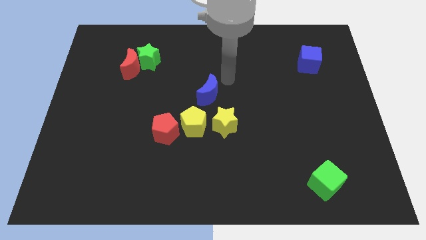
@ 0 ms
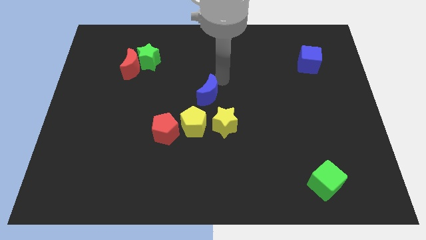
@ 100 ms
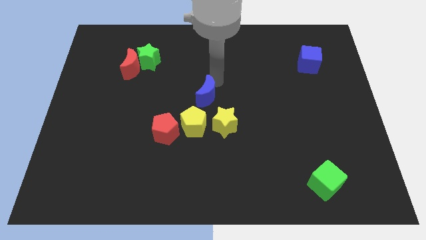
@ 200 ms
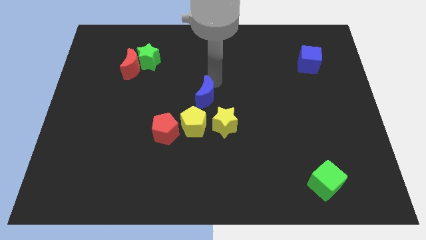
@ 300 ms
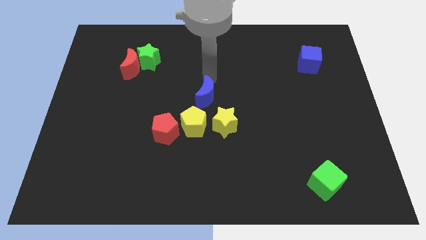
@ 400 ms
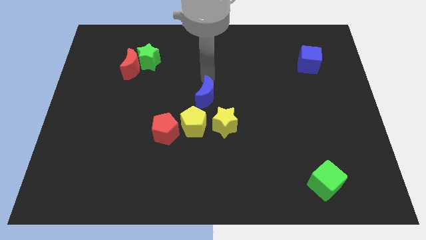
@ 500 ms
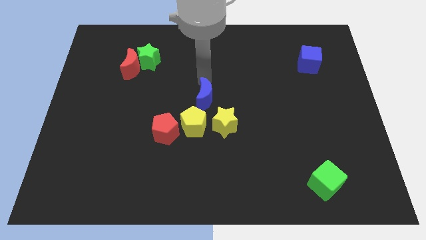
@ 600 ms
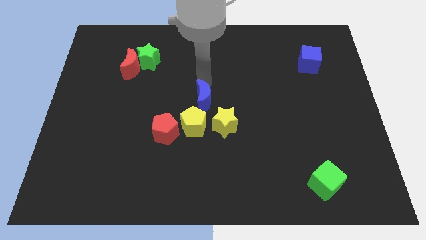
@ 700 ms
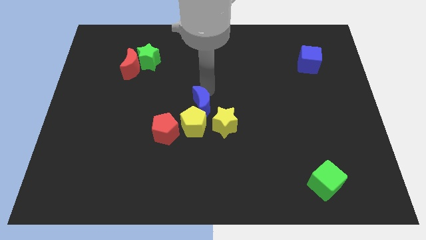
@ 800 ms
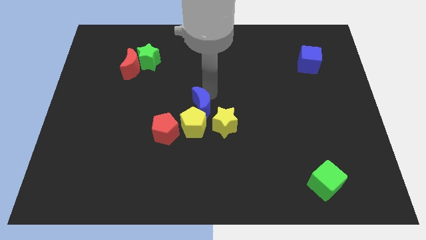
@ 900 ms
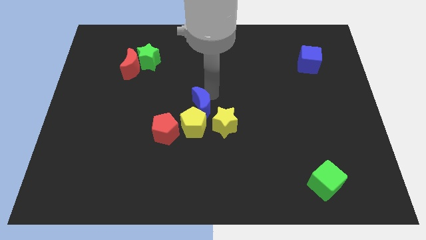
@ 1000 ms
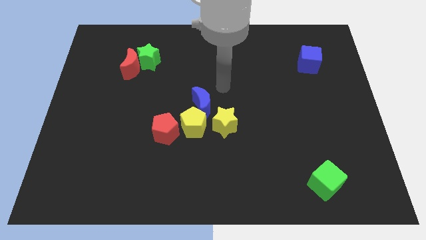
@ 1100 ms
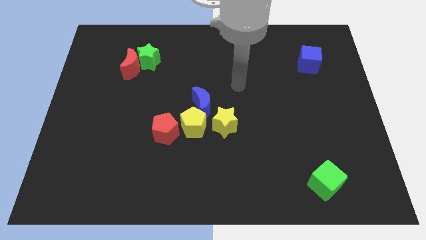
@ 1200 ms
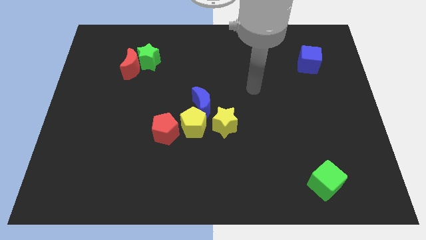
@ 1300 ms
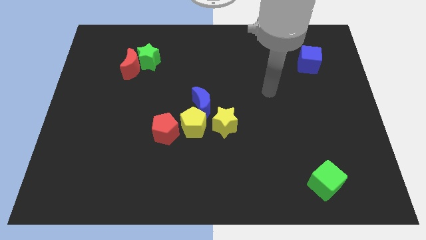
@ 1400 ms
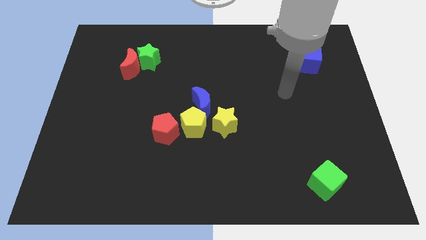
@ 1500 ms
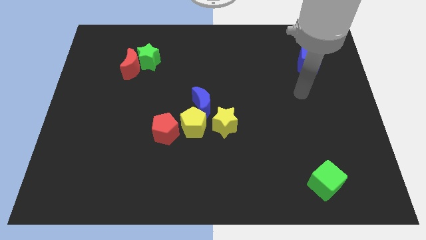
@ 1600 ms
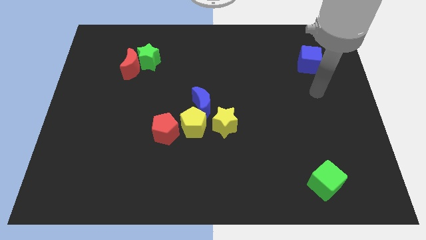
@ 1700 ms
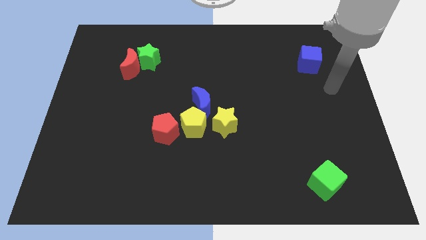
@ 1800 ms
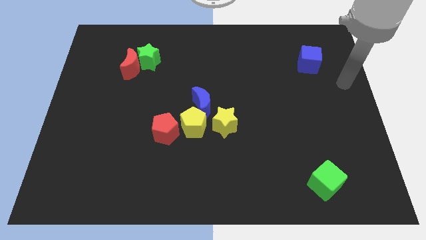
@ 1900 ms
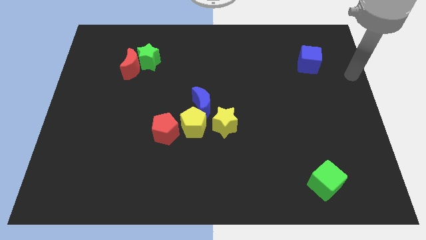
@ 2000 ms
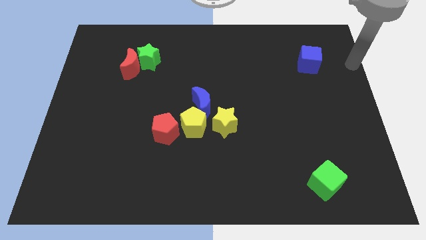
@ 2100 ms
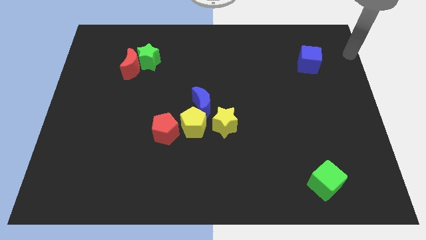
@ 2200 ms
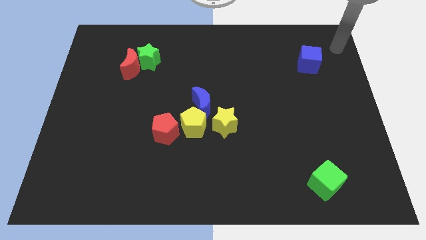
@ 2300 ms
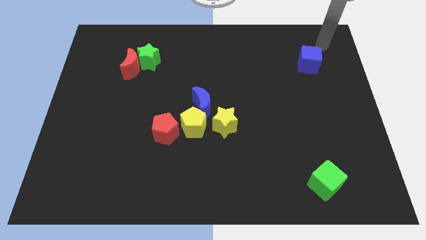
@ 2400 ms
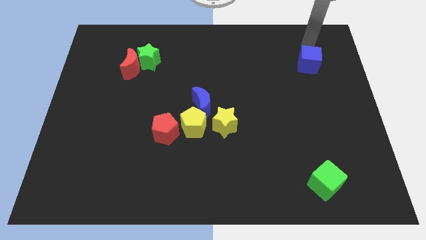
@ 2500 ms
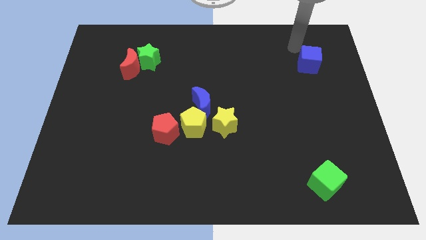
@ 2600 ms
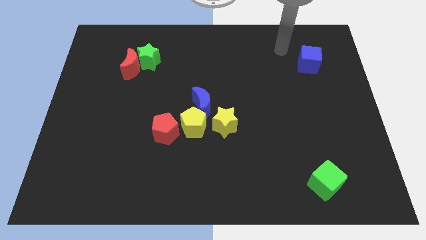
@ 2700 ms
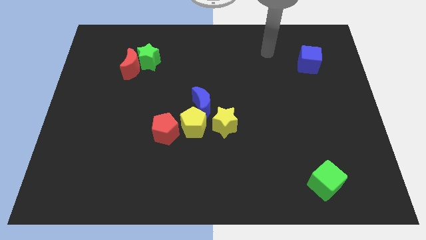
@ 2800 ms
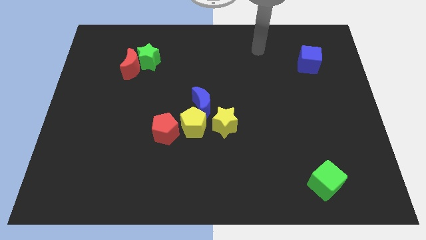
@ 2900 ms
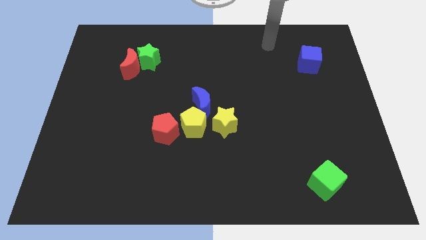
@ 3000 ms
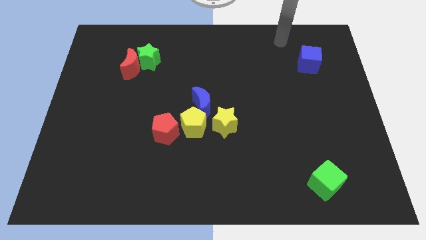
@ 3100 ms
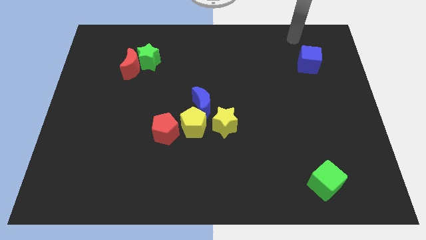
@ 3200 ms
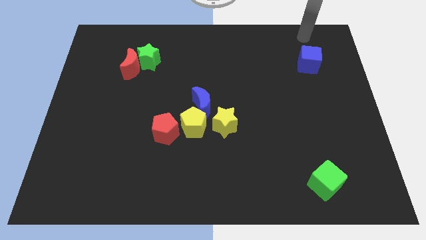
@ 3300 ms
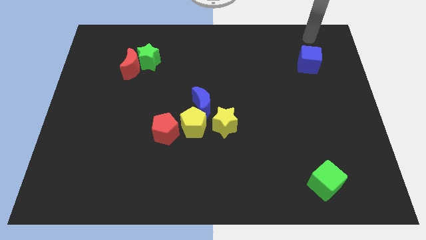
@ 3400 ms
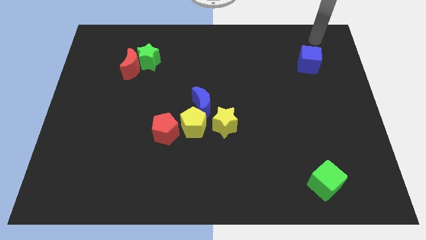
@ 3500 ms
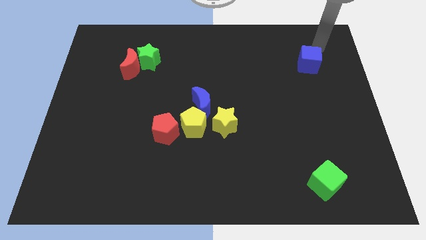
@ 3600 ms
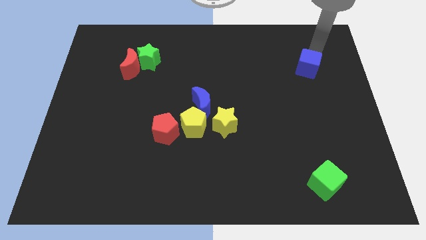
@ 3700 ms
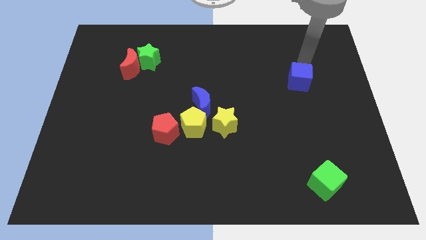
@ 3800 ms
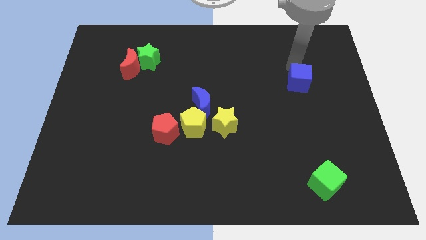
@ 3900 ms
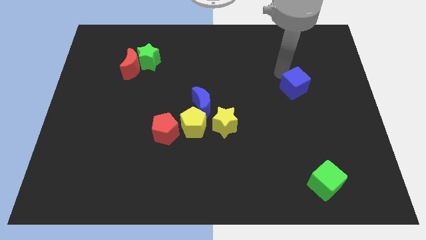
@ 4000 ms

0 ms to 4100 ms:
place the blue cube diagonally to the top right of the yellow star

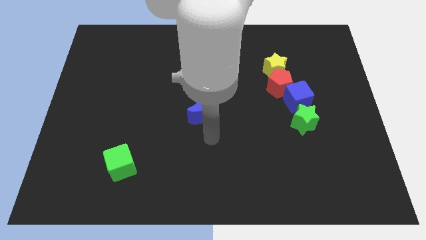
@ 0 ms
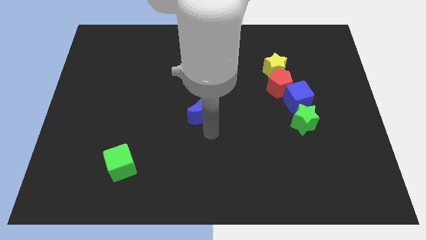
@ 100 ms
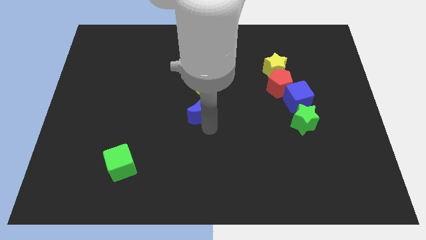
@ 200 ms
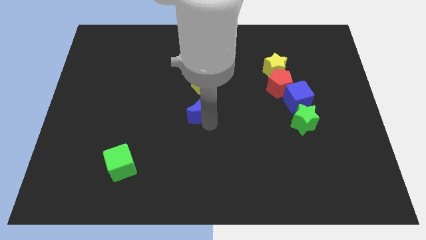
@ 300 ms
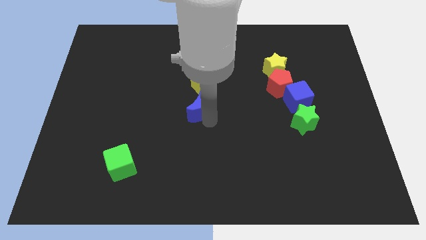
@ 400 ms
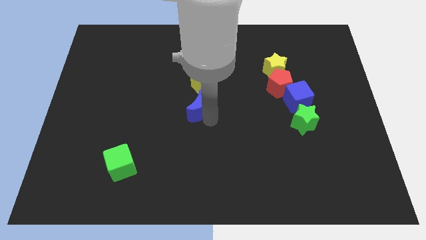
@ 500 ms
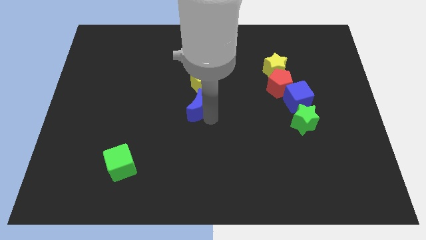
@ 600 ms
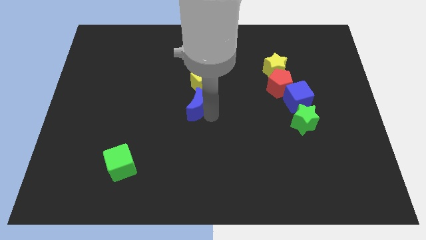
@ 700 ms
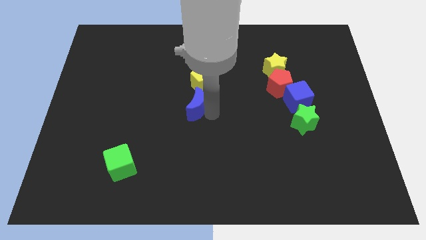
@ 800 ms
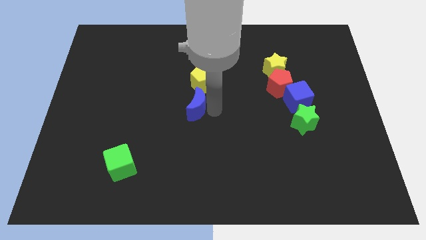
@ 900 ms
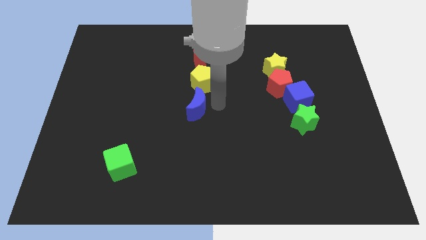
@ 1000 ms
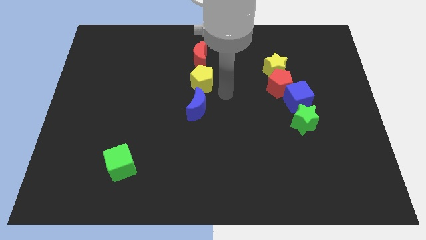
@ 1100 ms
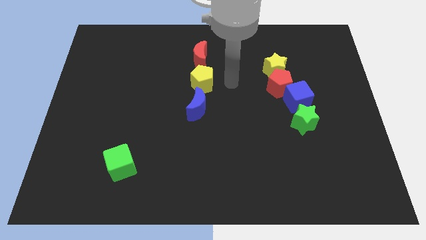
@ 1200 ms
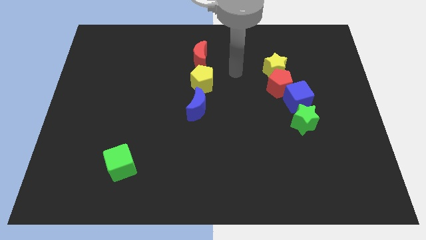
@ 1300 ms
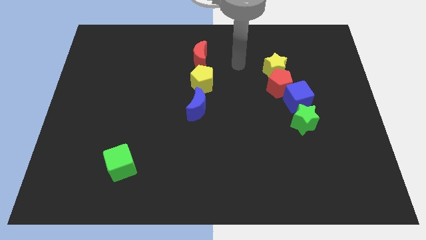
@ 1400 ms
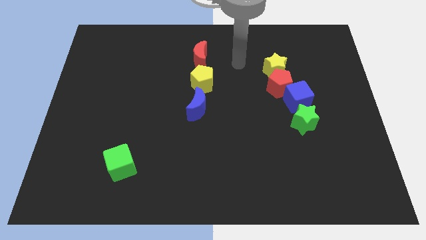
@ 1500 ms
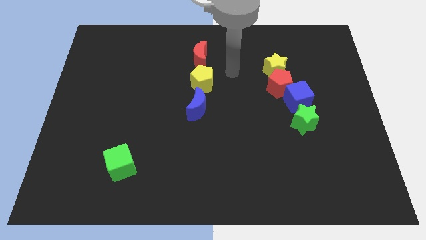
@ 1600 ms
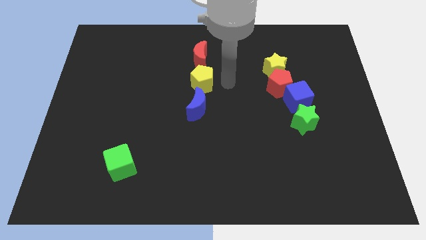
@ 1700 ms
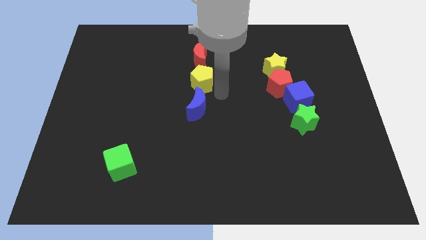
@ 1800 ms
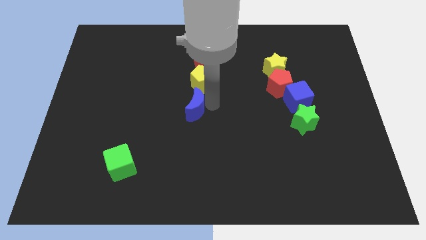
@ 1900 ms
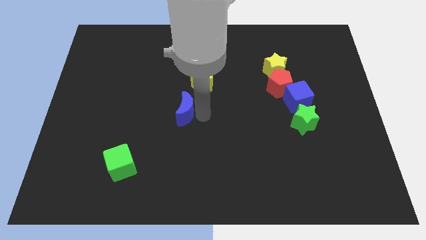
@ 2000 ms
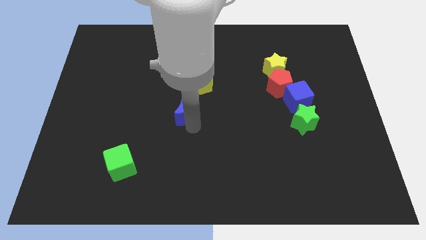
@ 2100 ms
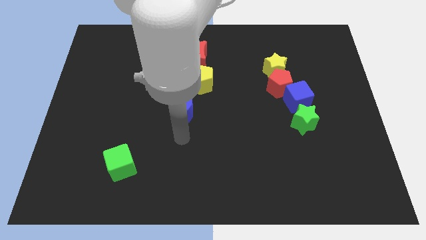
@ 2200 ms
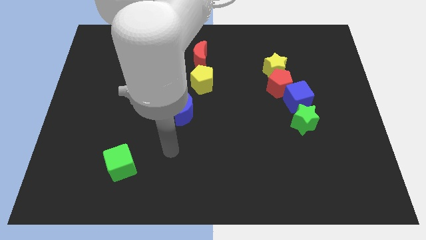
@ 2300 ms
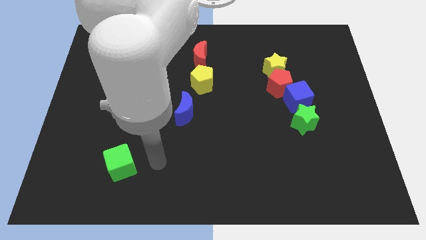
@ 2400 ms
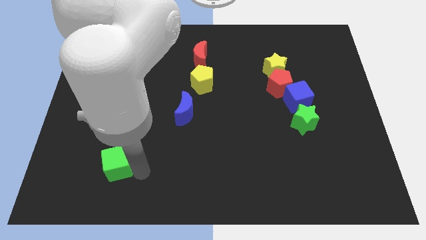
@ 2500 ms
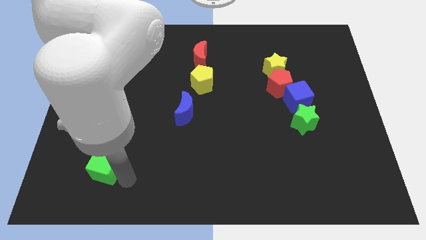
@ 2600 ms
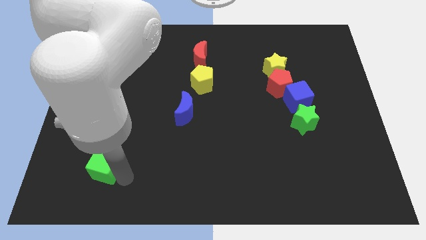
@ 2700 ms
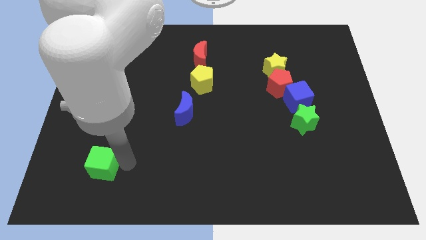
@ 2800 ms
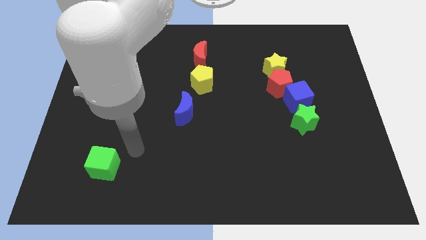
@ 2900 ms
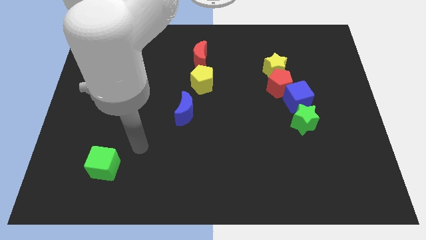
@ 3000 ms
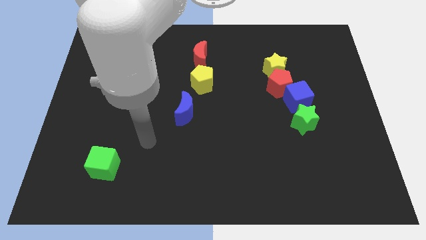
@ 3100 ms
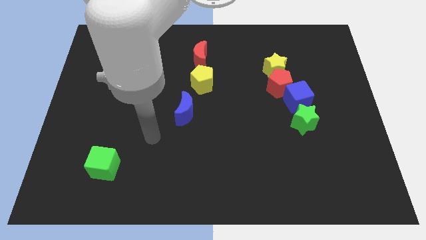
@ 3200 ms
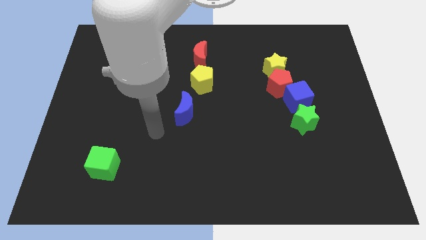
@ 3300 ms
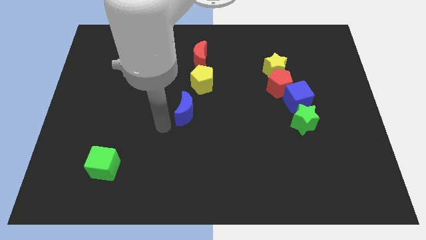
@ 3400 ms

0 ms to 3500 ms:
slightly move the green cube towards the left

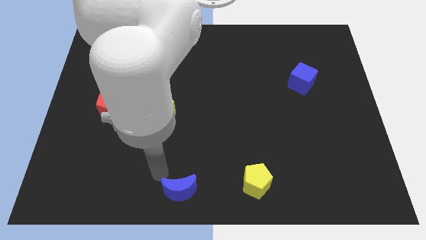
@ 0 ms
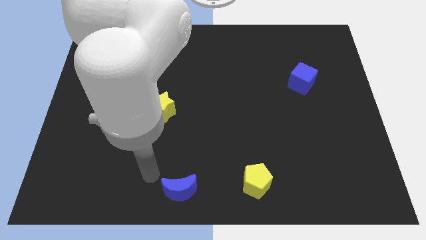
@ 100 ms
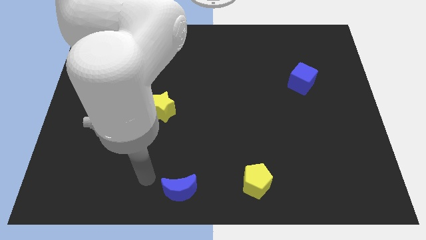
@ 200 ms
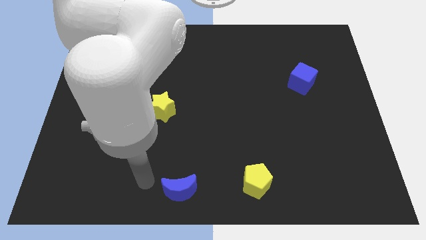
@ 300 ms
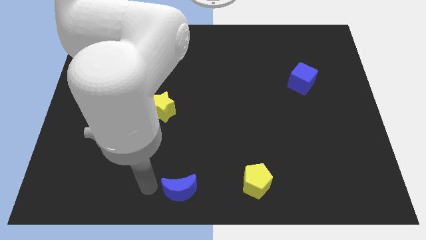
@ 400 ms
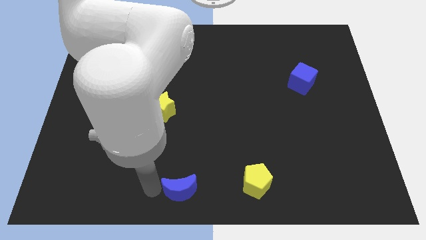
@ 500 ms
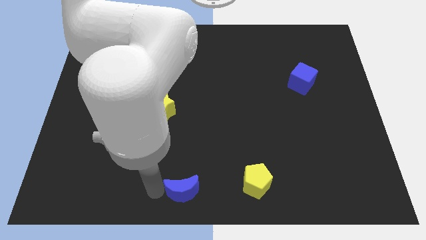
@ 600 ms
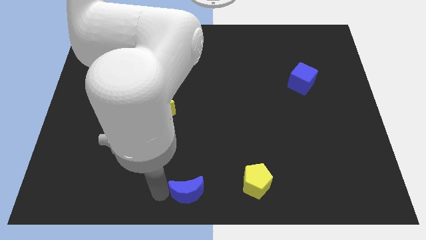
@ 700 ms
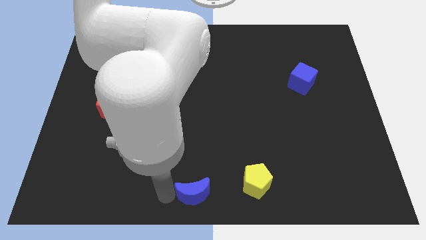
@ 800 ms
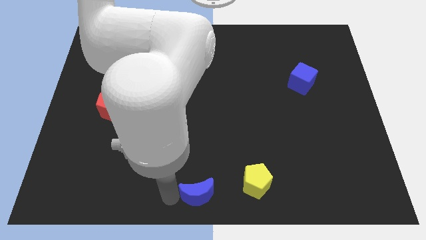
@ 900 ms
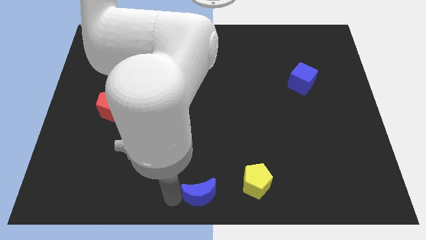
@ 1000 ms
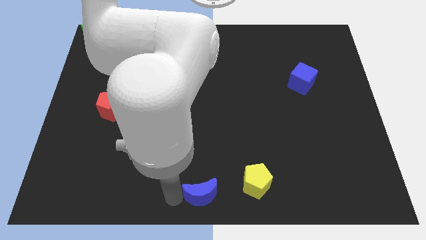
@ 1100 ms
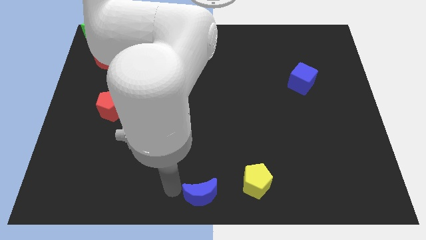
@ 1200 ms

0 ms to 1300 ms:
slightly move blue moon to the right

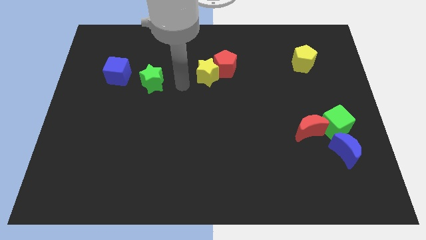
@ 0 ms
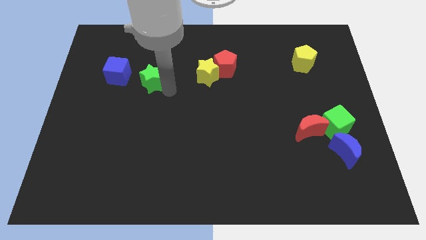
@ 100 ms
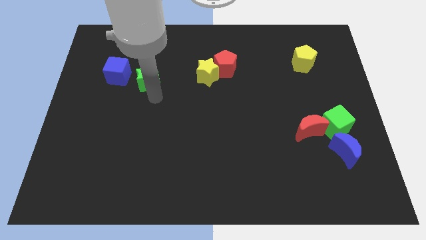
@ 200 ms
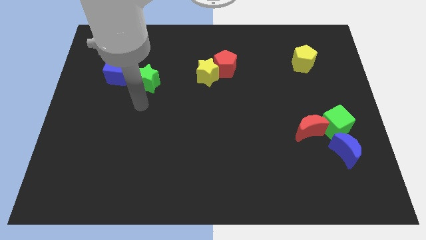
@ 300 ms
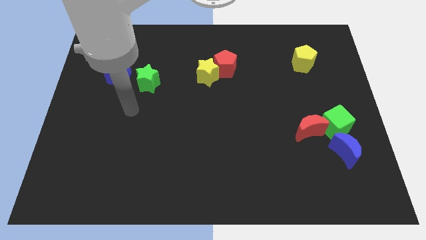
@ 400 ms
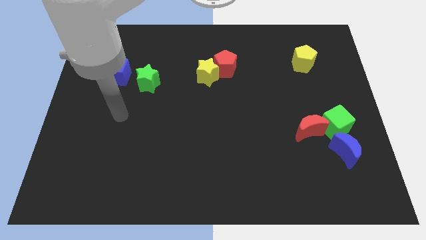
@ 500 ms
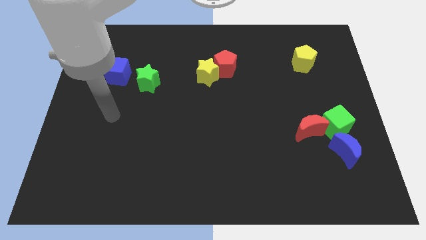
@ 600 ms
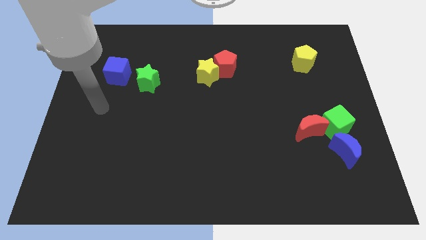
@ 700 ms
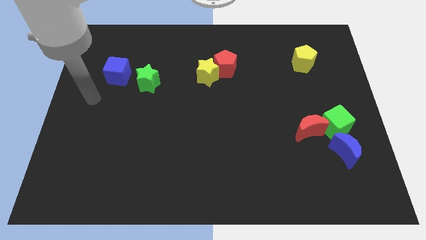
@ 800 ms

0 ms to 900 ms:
move green star towards the blue cube
